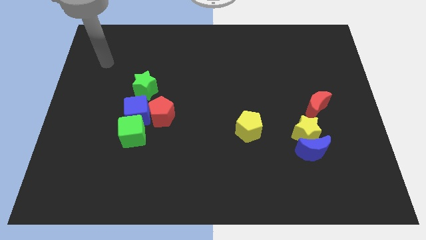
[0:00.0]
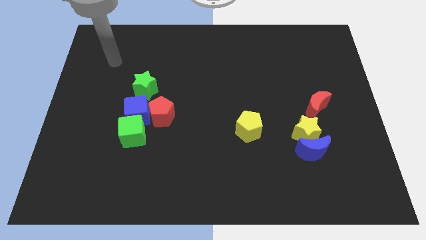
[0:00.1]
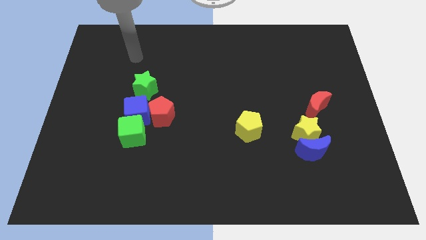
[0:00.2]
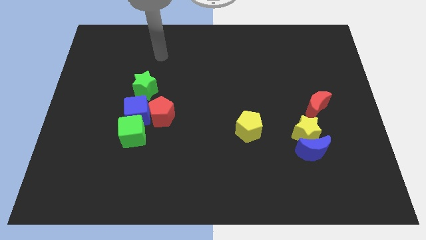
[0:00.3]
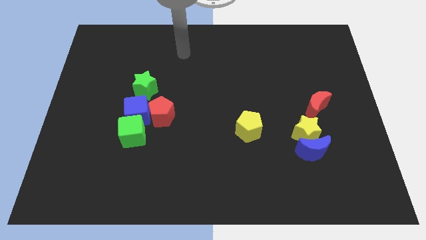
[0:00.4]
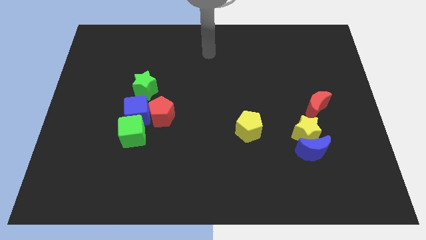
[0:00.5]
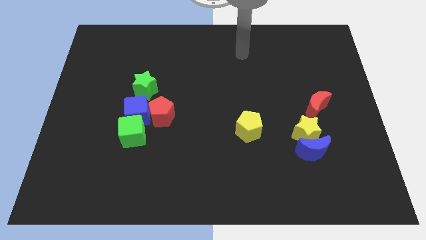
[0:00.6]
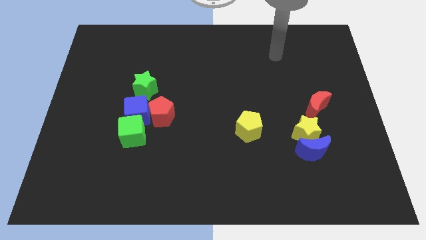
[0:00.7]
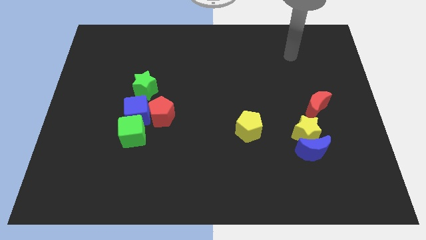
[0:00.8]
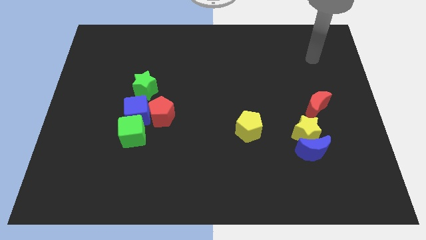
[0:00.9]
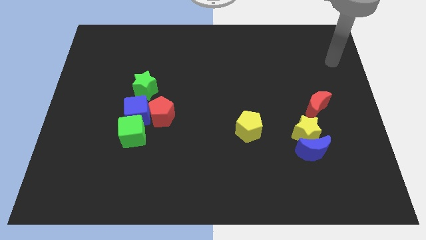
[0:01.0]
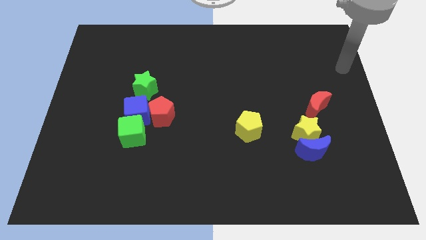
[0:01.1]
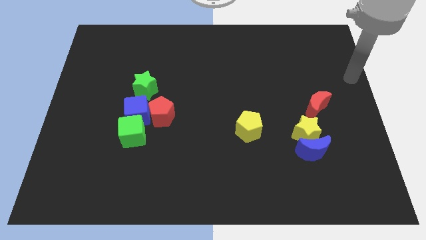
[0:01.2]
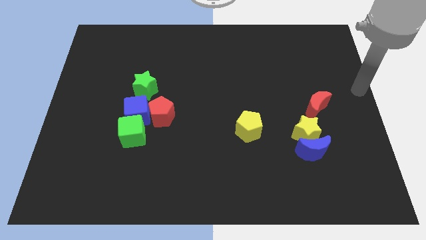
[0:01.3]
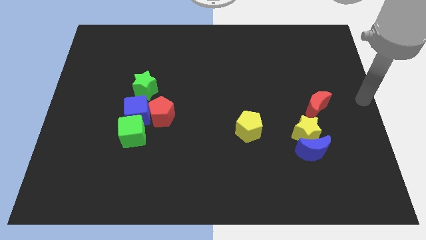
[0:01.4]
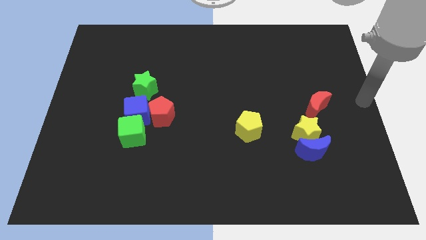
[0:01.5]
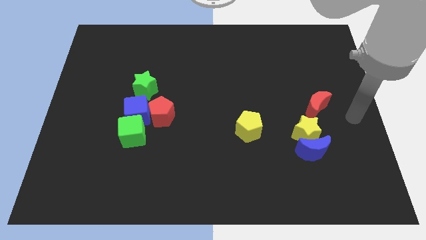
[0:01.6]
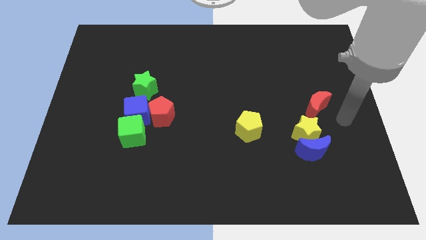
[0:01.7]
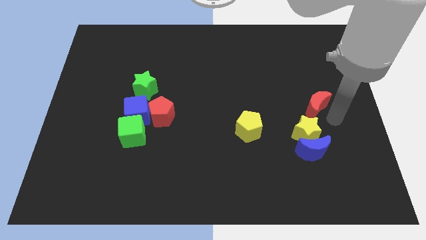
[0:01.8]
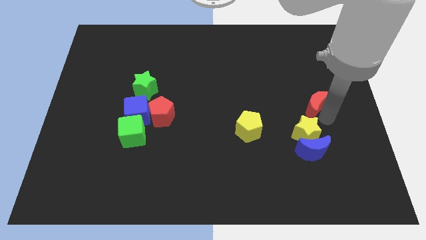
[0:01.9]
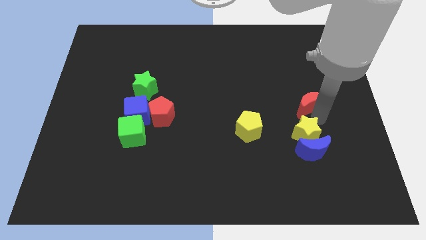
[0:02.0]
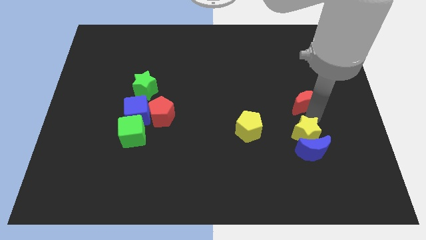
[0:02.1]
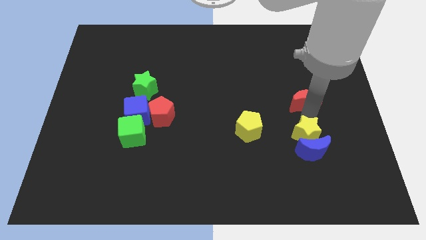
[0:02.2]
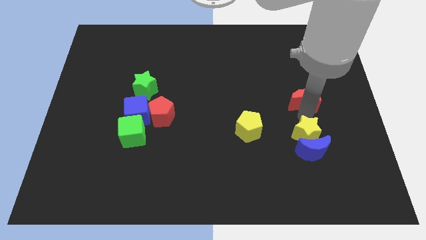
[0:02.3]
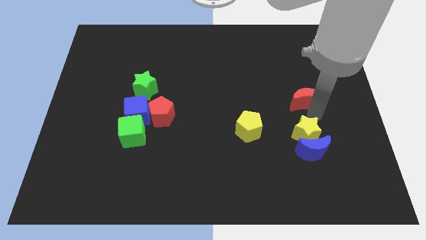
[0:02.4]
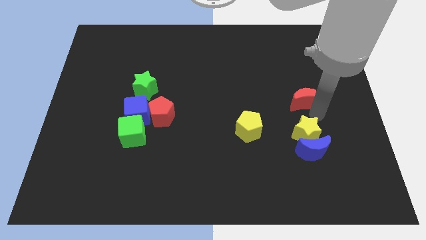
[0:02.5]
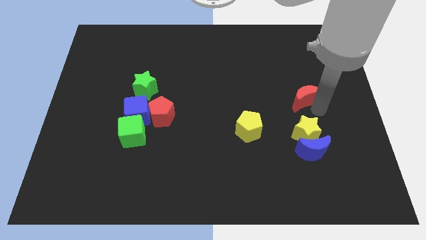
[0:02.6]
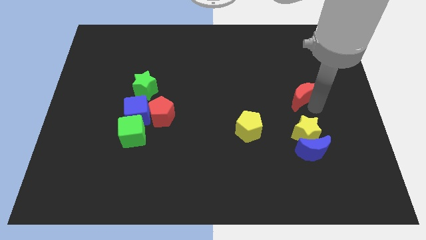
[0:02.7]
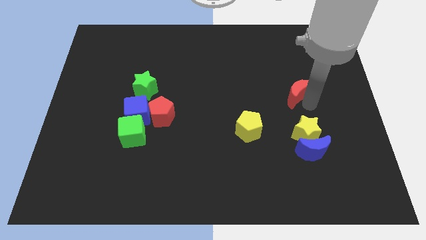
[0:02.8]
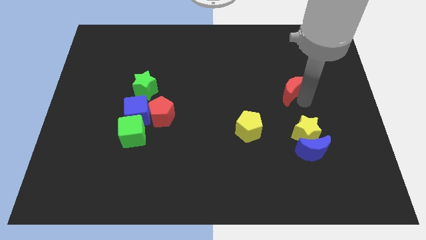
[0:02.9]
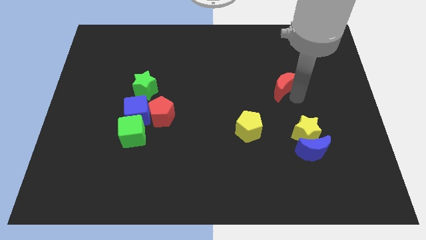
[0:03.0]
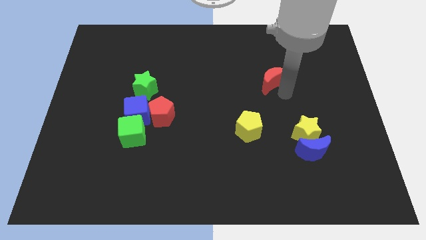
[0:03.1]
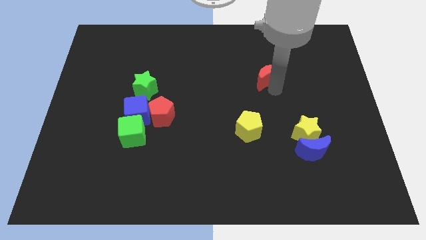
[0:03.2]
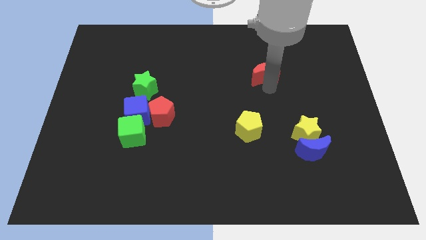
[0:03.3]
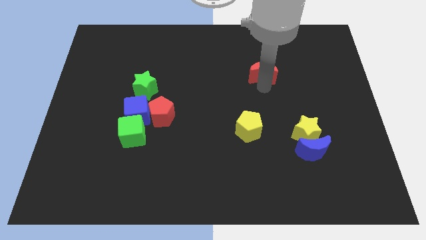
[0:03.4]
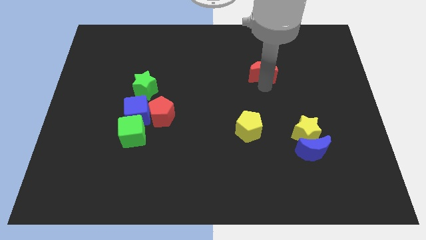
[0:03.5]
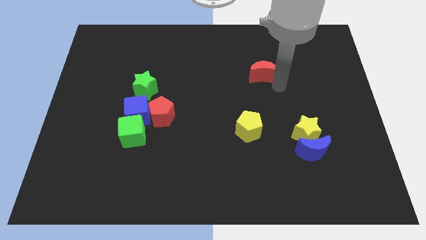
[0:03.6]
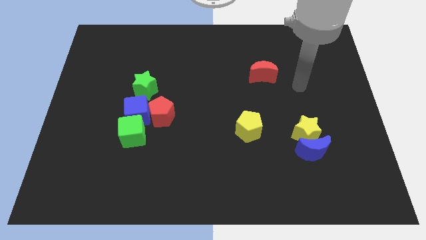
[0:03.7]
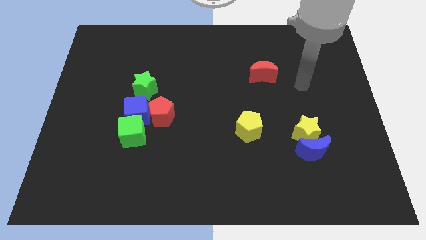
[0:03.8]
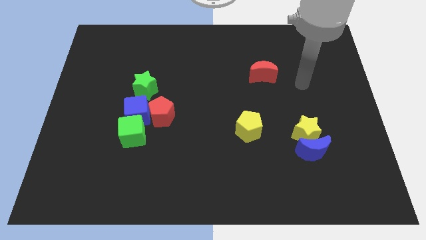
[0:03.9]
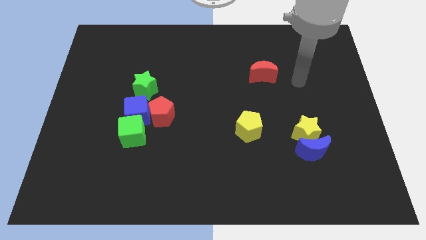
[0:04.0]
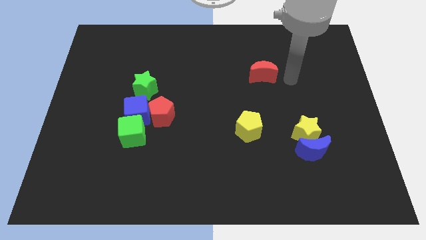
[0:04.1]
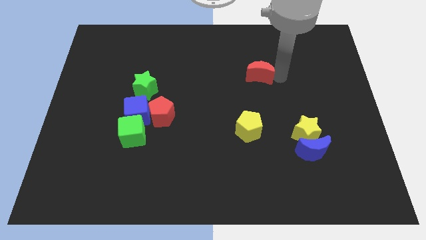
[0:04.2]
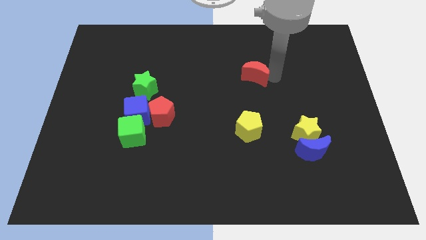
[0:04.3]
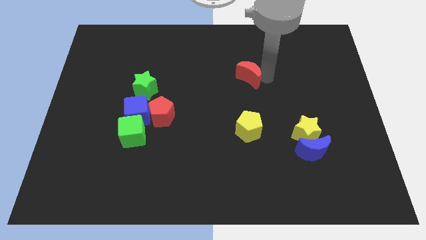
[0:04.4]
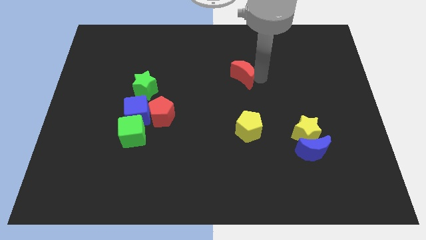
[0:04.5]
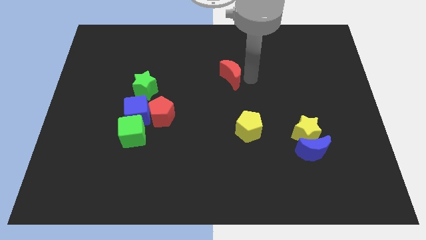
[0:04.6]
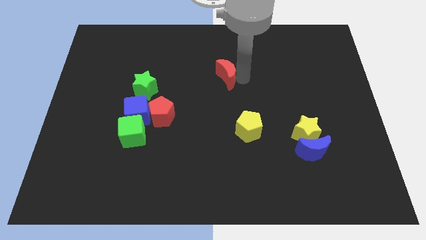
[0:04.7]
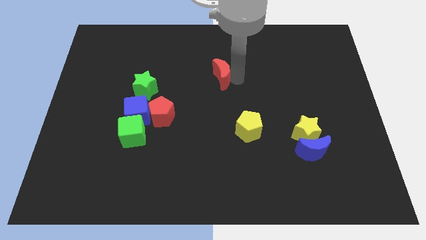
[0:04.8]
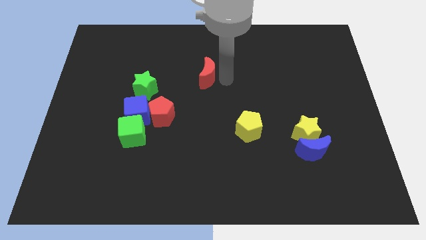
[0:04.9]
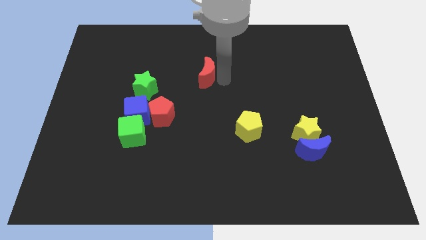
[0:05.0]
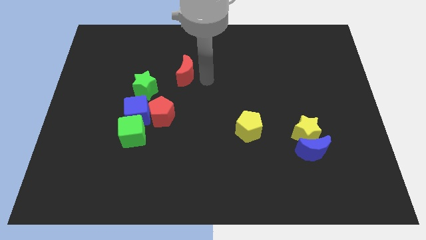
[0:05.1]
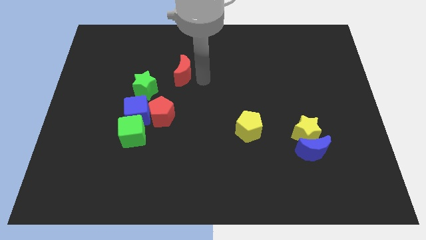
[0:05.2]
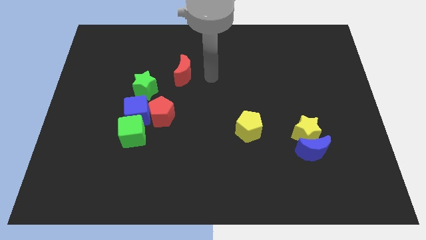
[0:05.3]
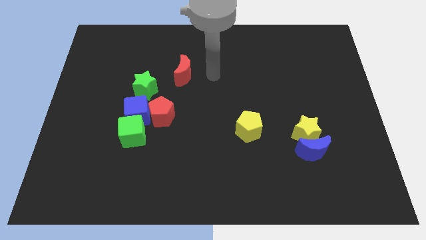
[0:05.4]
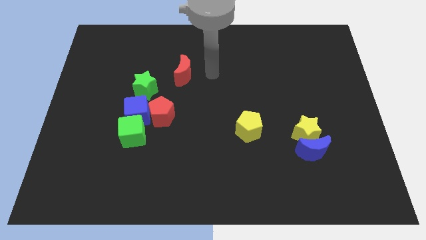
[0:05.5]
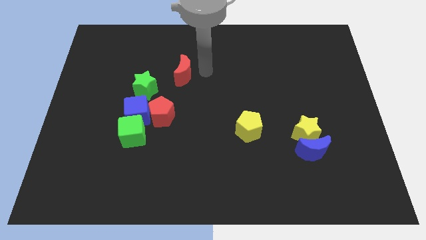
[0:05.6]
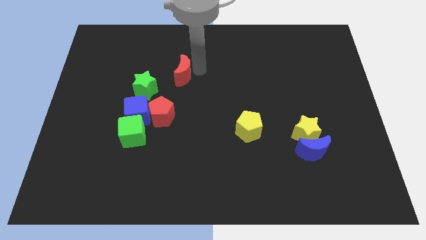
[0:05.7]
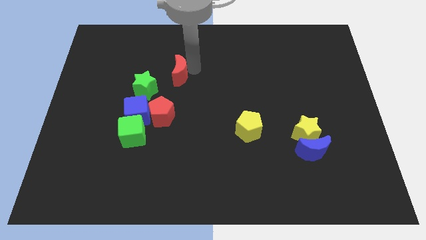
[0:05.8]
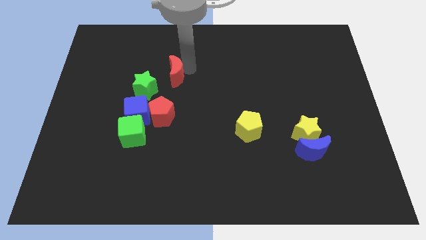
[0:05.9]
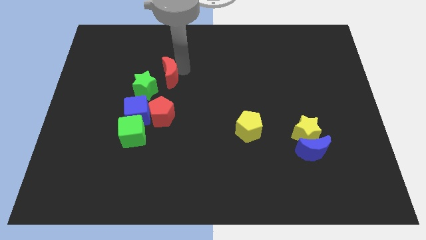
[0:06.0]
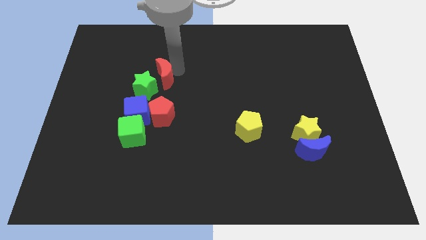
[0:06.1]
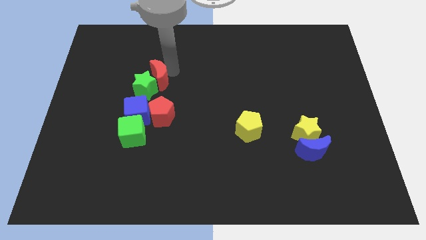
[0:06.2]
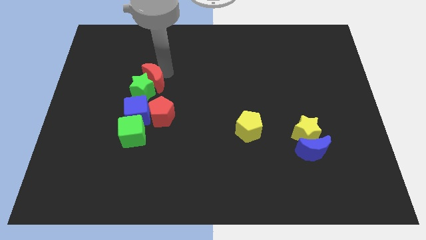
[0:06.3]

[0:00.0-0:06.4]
put the red moon close to the green star

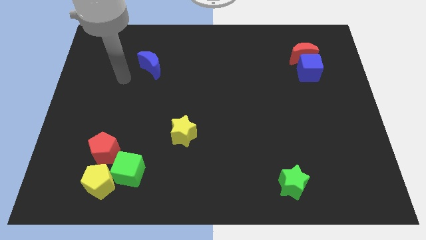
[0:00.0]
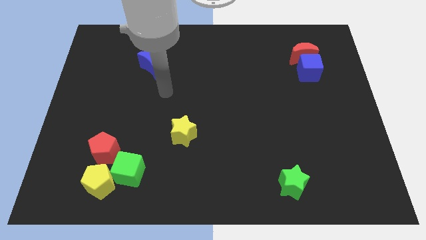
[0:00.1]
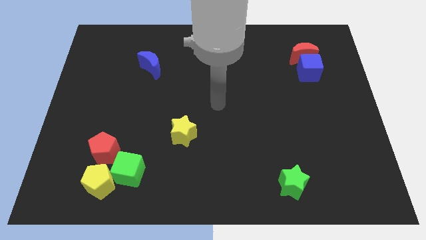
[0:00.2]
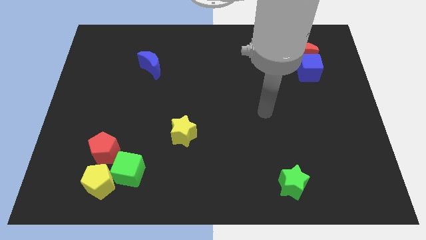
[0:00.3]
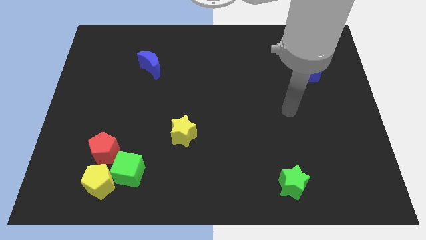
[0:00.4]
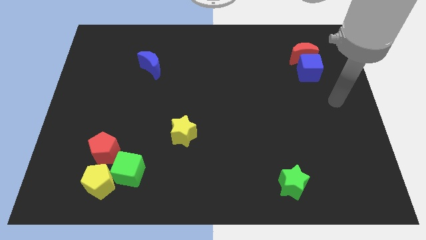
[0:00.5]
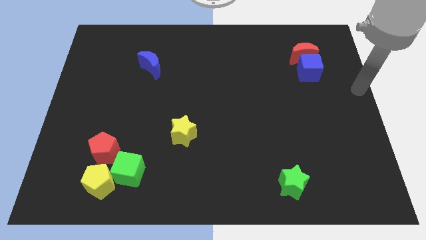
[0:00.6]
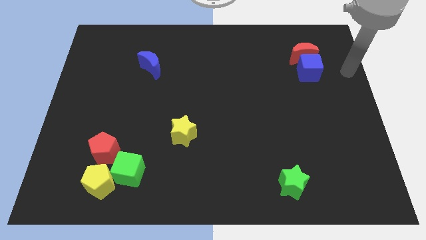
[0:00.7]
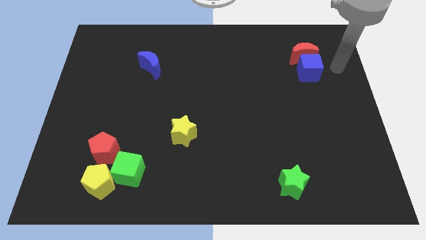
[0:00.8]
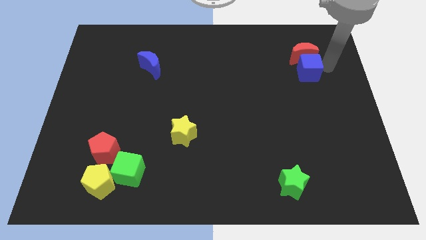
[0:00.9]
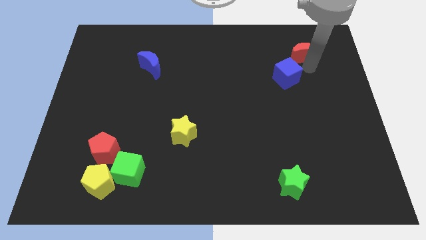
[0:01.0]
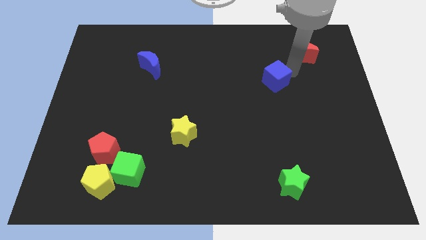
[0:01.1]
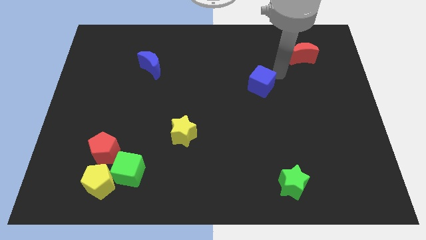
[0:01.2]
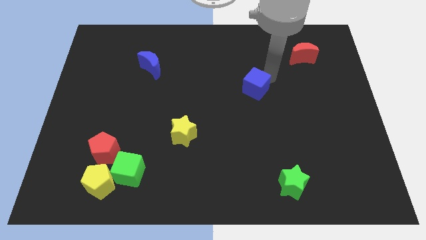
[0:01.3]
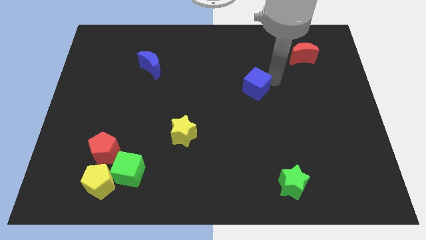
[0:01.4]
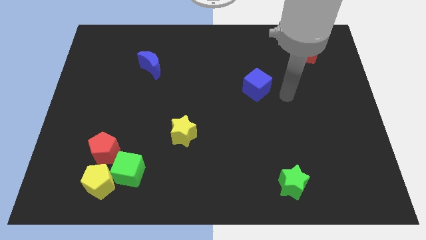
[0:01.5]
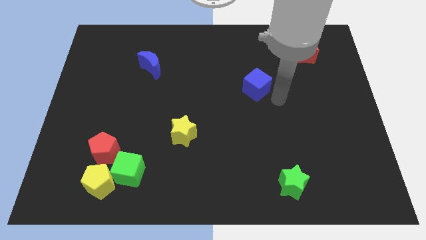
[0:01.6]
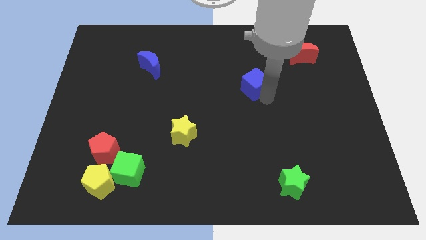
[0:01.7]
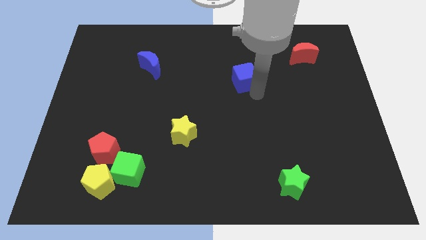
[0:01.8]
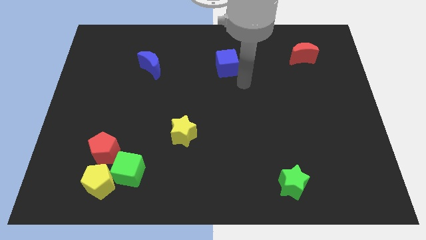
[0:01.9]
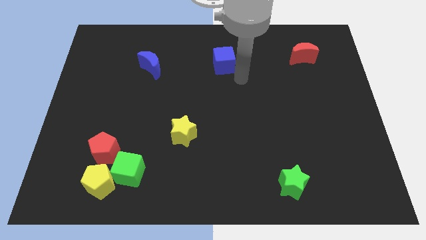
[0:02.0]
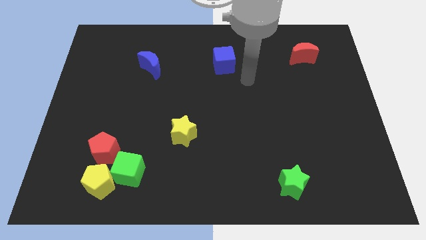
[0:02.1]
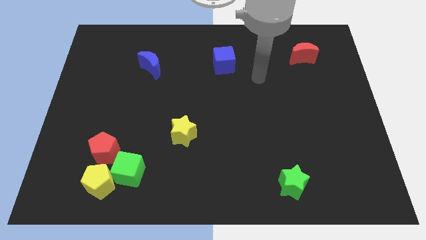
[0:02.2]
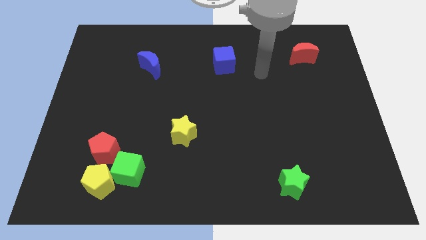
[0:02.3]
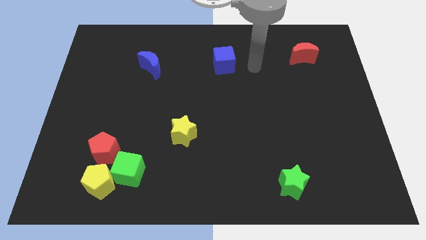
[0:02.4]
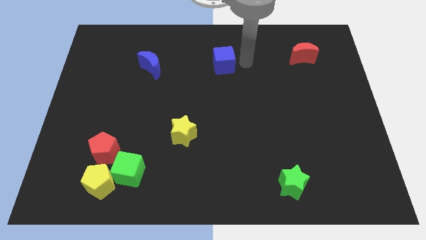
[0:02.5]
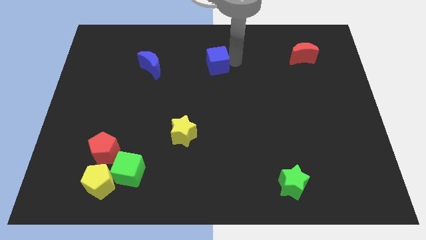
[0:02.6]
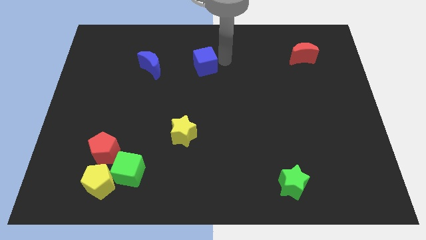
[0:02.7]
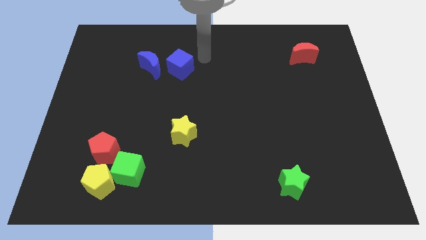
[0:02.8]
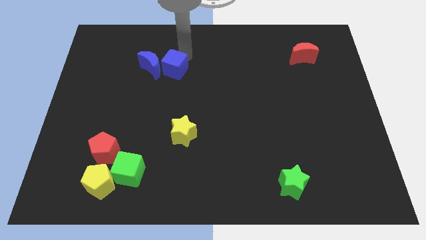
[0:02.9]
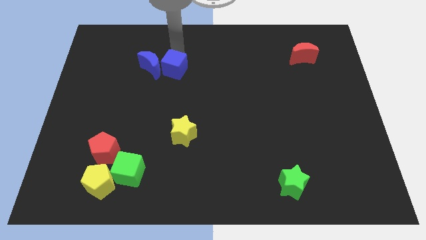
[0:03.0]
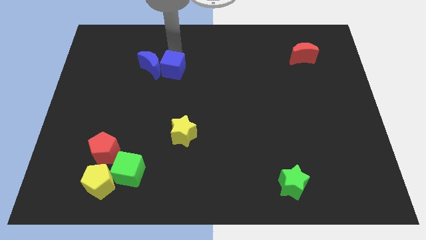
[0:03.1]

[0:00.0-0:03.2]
move the blue cube next to the blue moon
